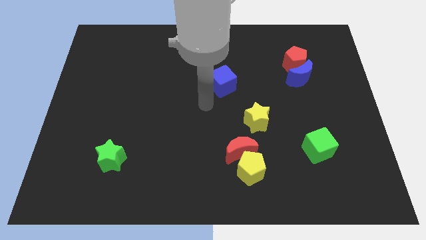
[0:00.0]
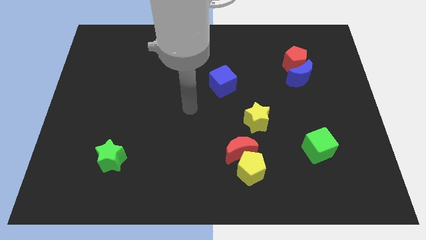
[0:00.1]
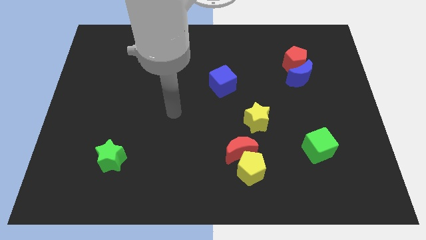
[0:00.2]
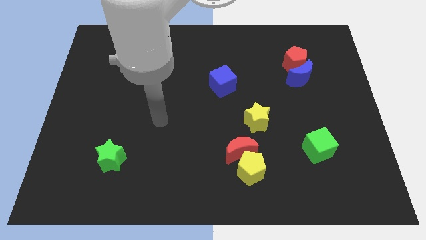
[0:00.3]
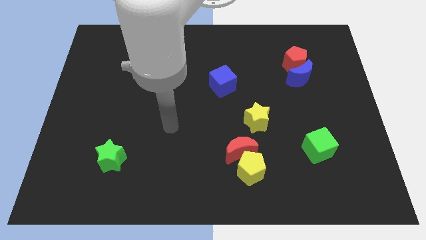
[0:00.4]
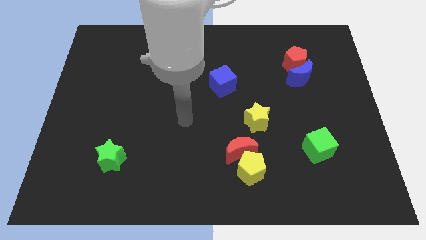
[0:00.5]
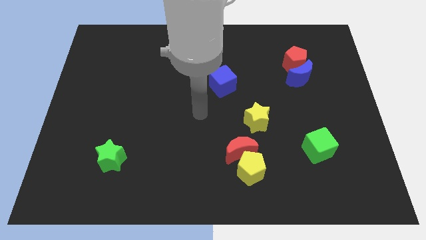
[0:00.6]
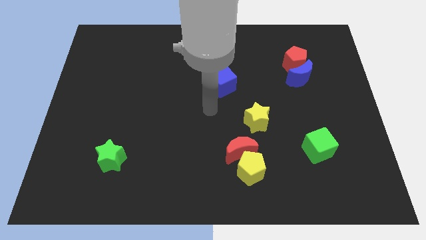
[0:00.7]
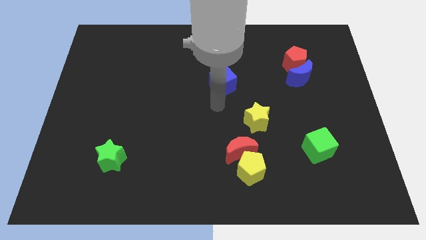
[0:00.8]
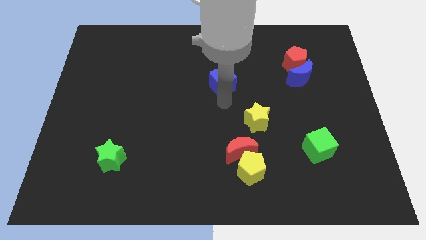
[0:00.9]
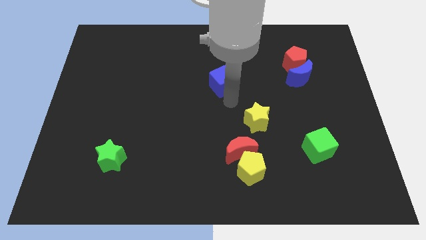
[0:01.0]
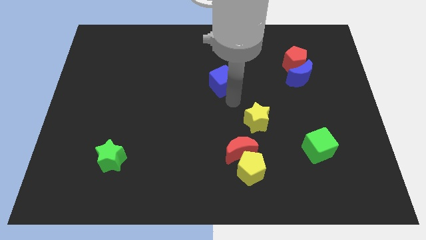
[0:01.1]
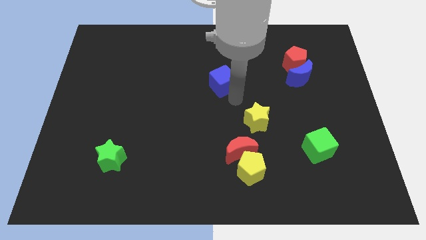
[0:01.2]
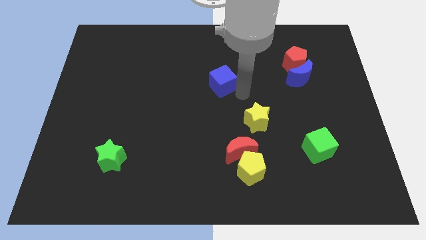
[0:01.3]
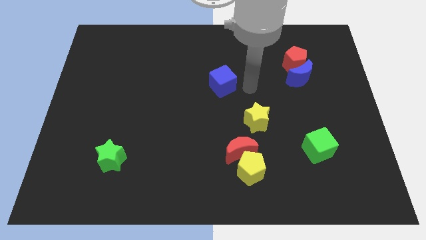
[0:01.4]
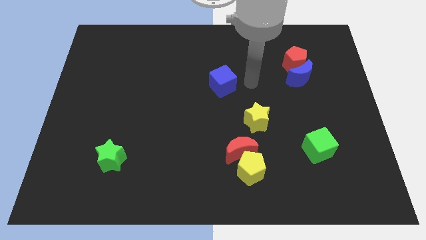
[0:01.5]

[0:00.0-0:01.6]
place the arm towards the right side of the blue cube

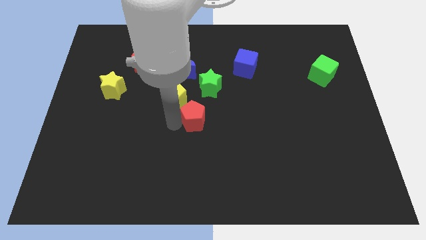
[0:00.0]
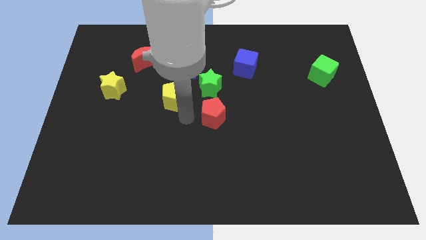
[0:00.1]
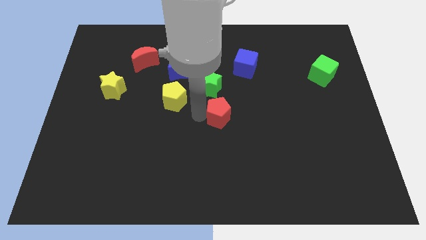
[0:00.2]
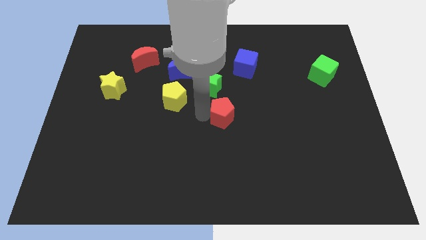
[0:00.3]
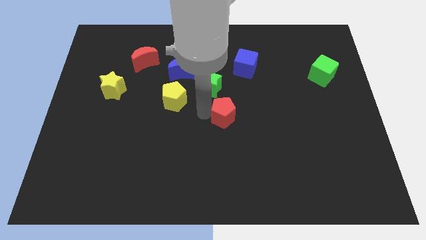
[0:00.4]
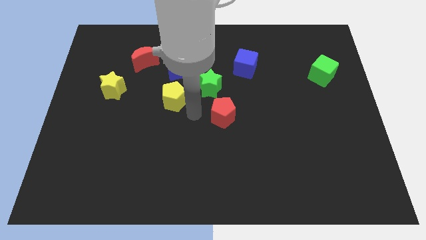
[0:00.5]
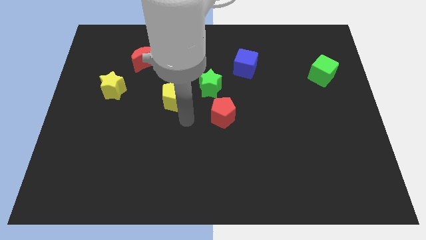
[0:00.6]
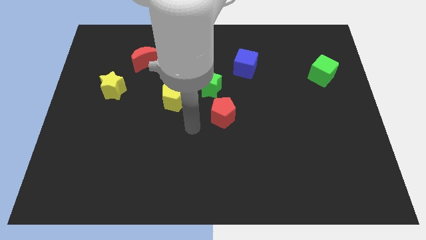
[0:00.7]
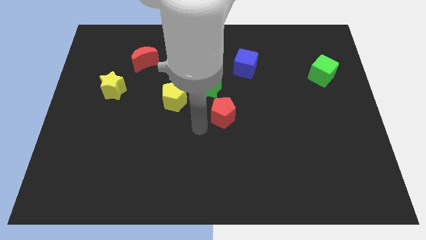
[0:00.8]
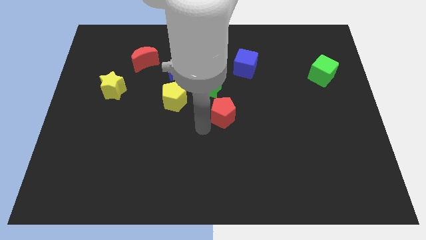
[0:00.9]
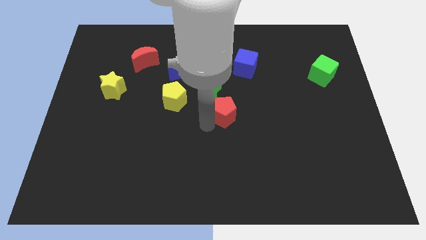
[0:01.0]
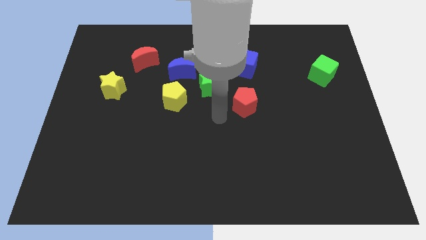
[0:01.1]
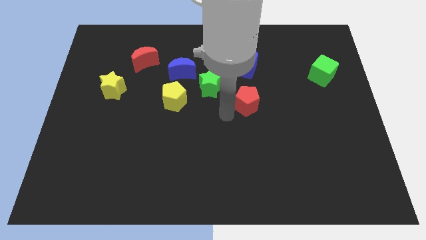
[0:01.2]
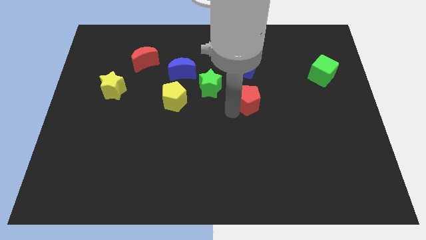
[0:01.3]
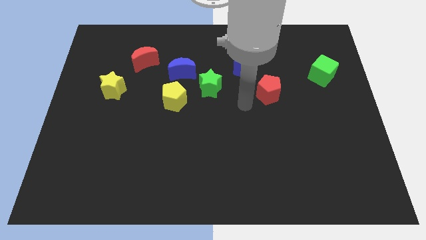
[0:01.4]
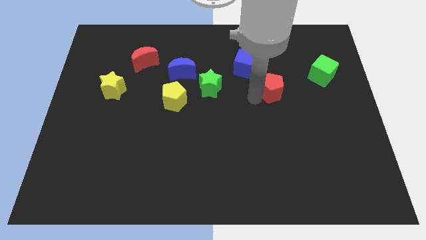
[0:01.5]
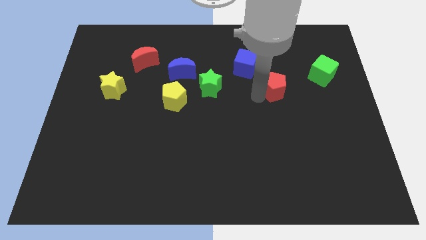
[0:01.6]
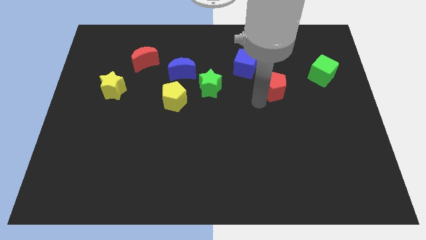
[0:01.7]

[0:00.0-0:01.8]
place red pentagon parallel to the right of green star

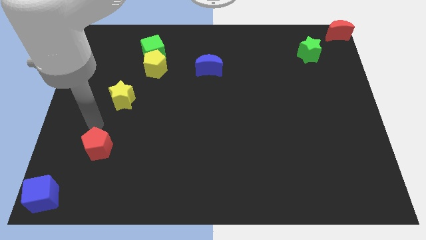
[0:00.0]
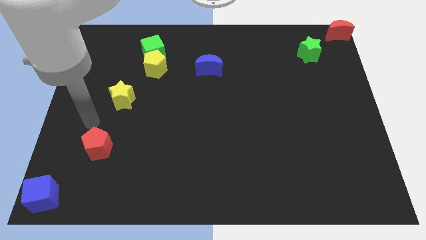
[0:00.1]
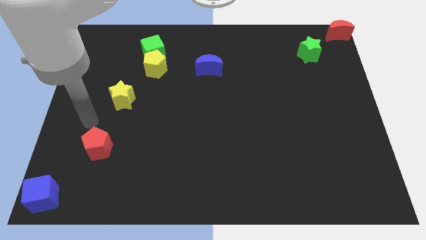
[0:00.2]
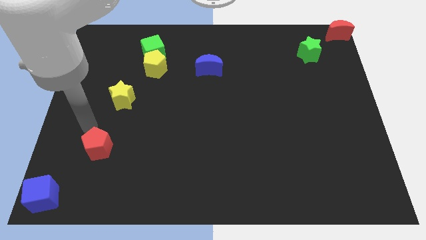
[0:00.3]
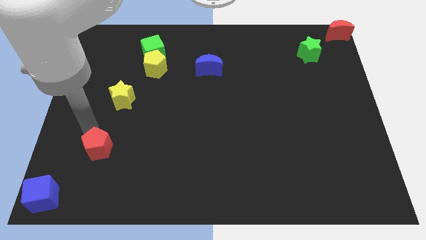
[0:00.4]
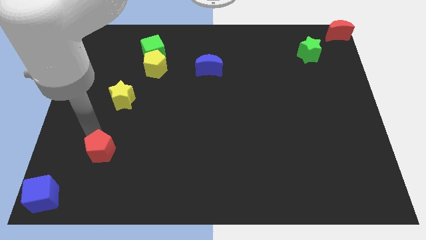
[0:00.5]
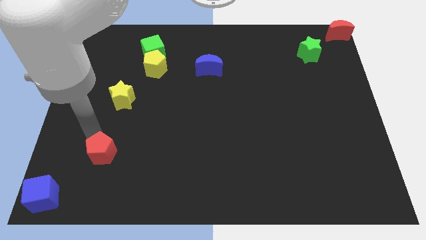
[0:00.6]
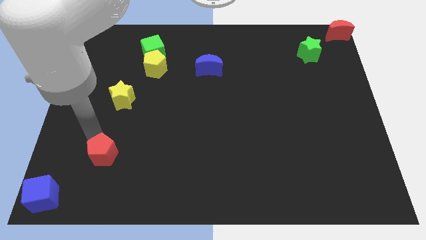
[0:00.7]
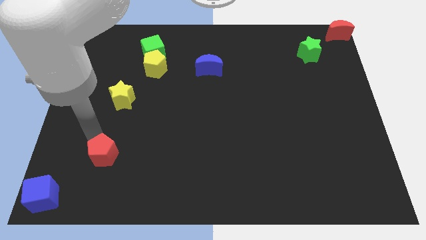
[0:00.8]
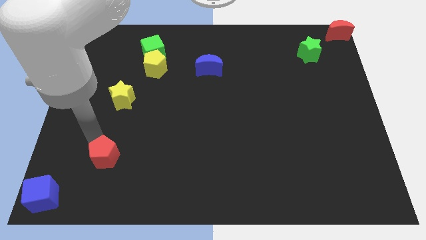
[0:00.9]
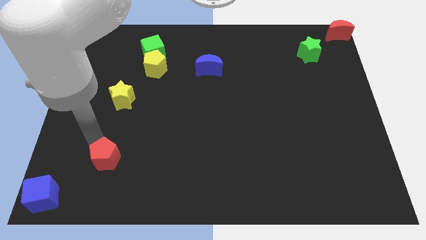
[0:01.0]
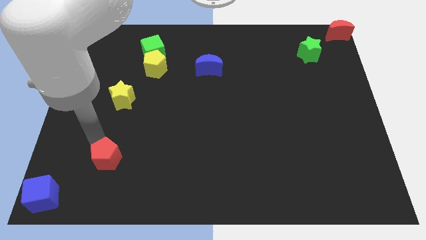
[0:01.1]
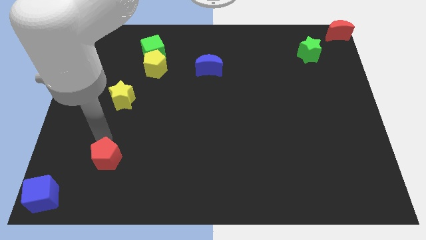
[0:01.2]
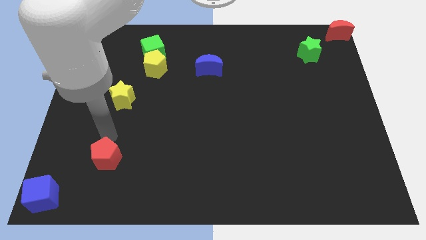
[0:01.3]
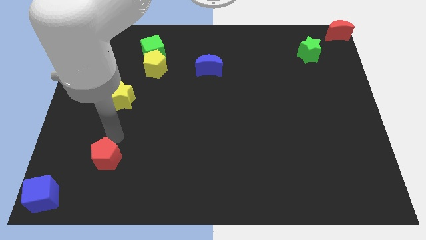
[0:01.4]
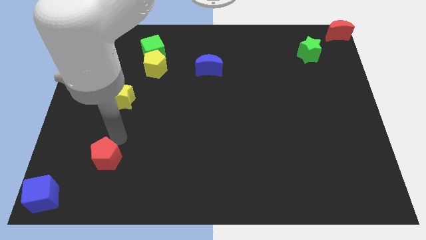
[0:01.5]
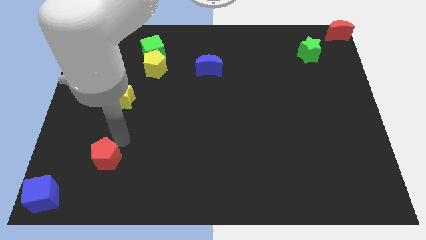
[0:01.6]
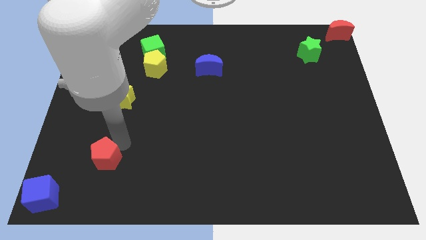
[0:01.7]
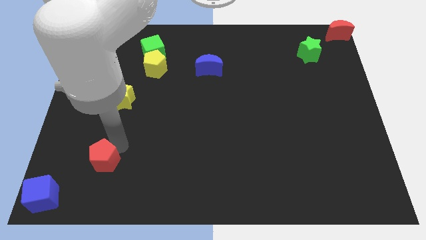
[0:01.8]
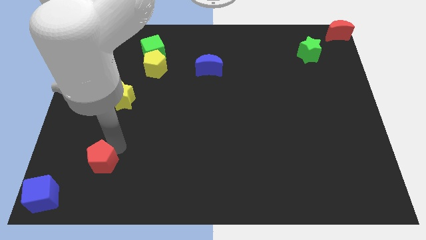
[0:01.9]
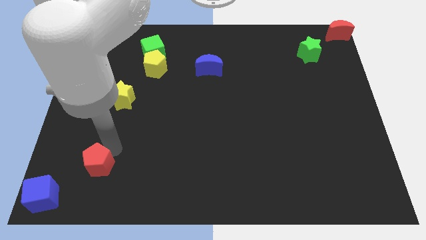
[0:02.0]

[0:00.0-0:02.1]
place the red pentagon diagonally above the blue cube

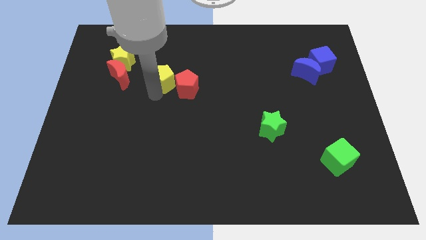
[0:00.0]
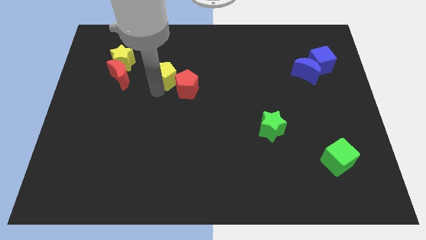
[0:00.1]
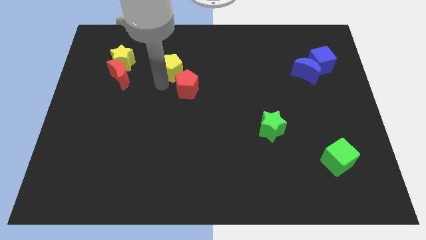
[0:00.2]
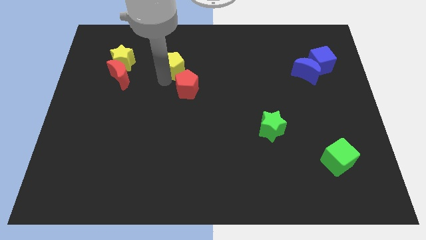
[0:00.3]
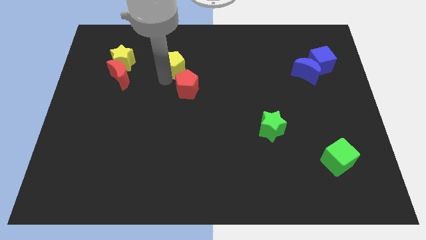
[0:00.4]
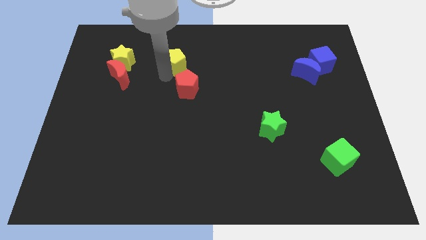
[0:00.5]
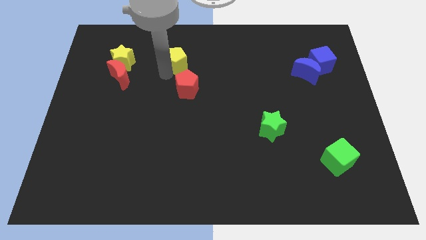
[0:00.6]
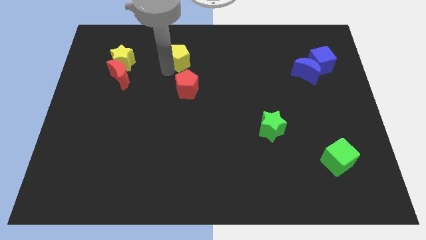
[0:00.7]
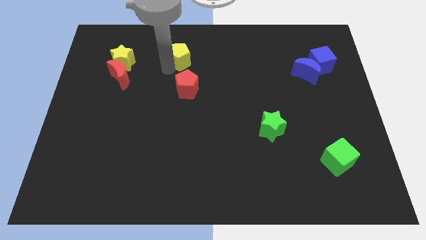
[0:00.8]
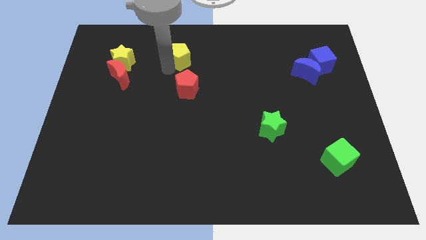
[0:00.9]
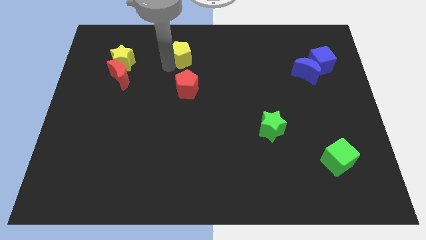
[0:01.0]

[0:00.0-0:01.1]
separate yellow pentagon from red pentagon

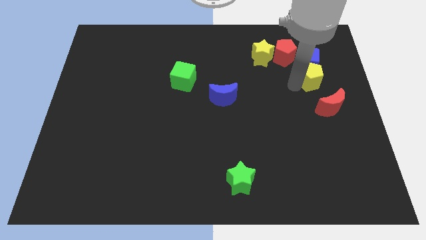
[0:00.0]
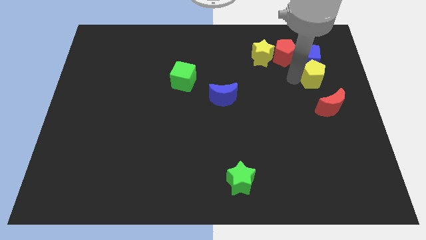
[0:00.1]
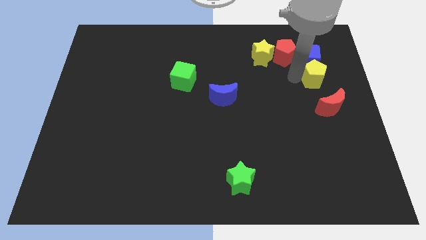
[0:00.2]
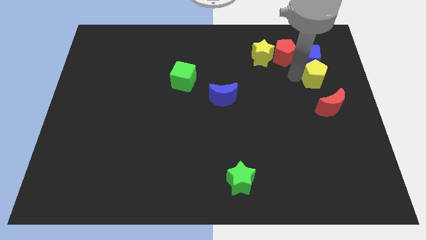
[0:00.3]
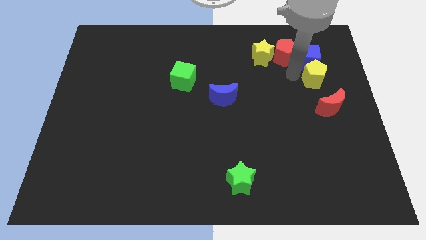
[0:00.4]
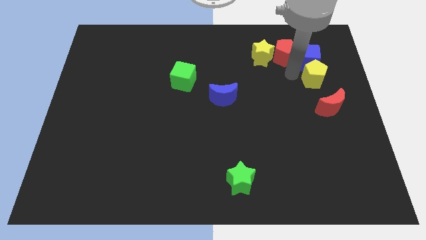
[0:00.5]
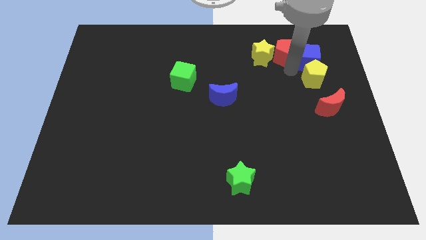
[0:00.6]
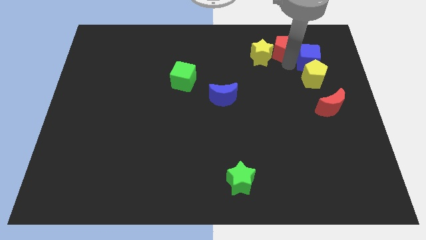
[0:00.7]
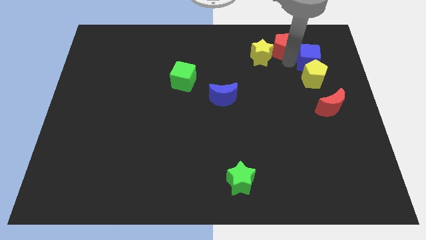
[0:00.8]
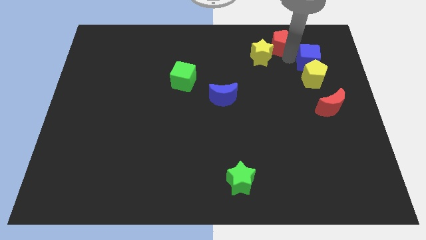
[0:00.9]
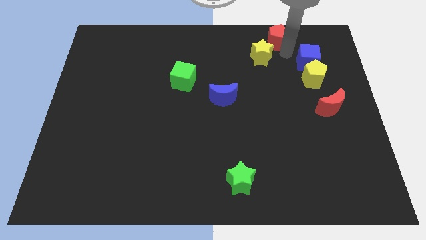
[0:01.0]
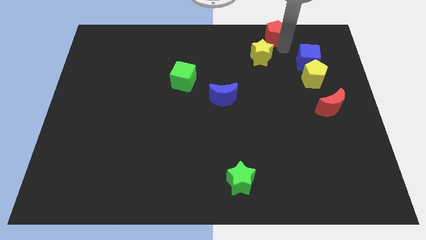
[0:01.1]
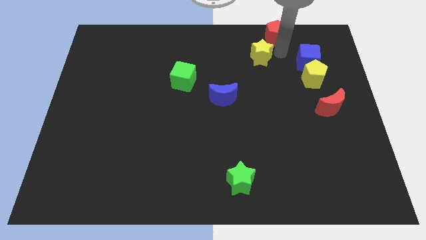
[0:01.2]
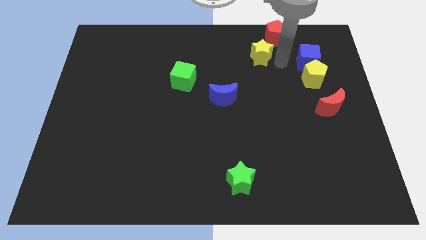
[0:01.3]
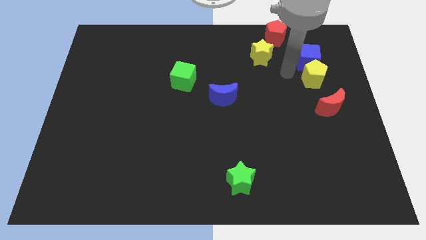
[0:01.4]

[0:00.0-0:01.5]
push the red pentagon to the top side

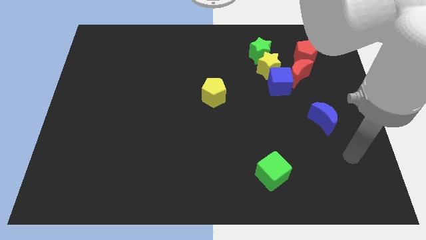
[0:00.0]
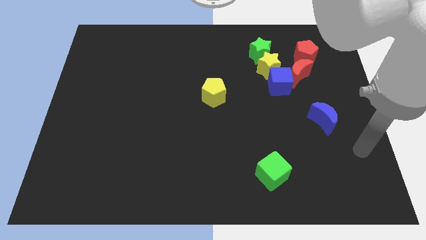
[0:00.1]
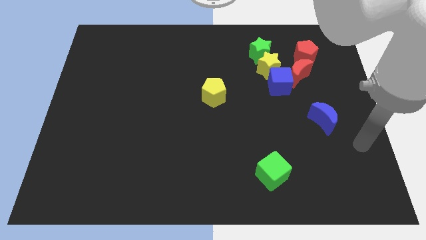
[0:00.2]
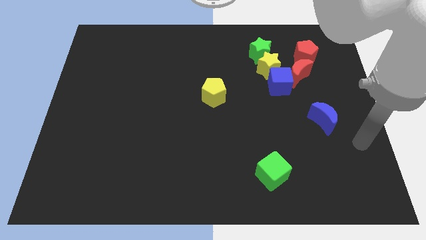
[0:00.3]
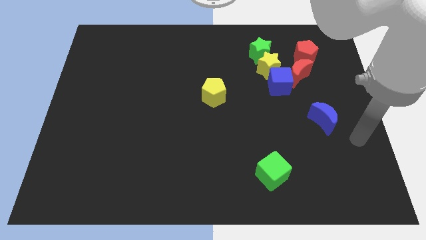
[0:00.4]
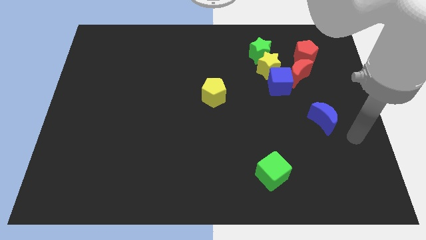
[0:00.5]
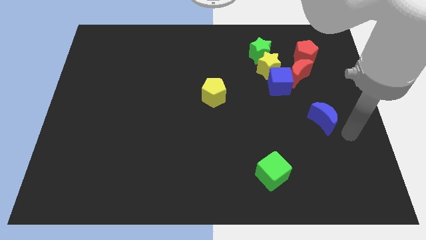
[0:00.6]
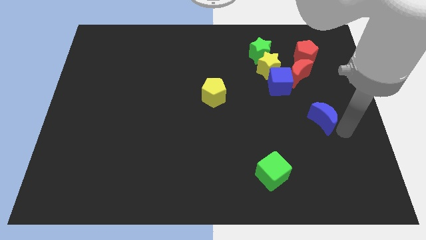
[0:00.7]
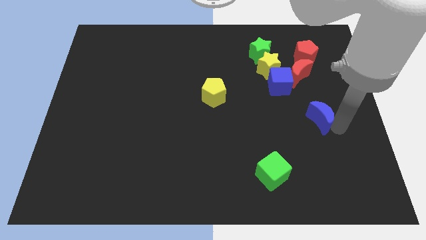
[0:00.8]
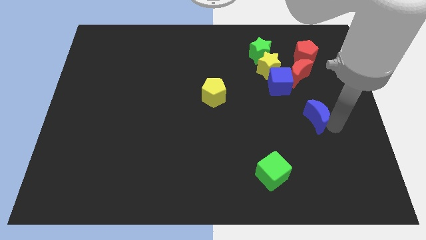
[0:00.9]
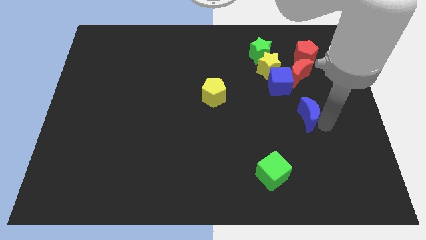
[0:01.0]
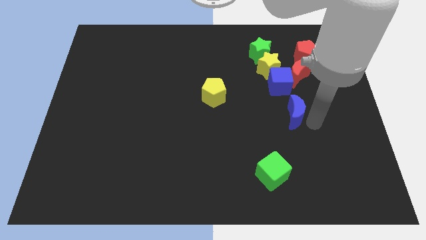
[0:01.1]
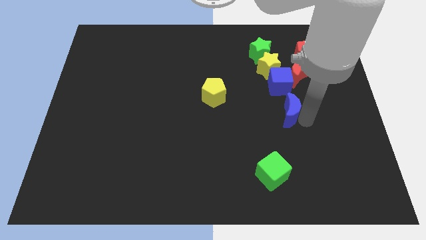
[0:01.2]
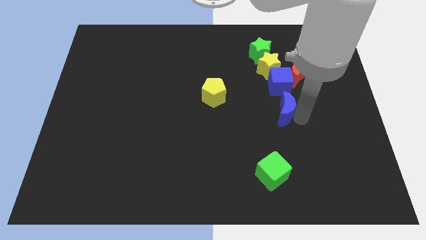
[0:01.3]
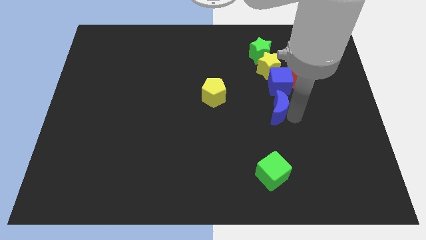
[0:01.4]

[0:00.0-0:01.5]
place the blue crescent below the blue cube
